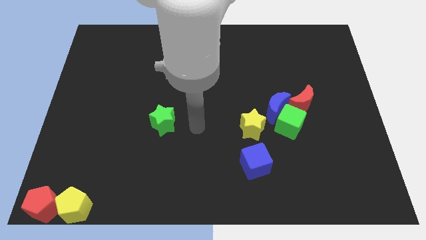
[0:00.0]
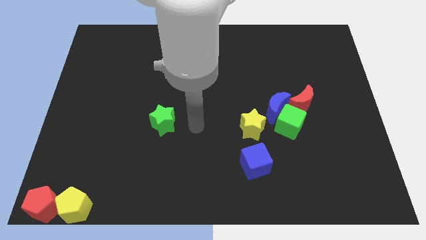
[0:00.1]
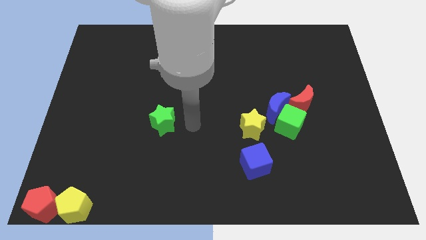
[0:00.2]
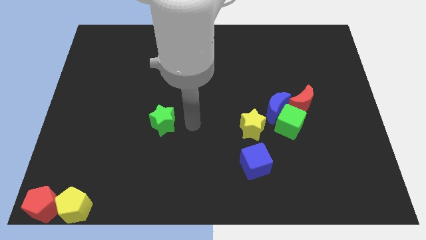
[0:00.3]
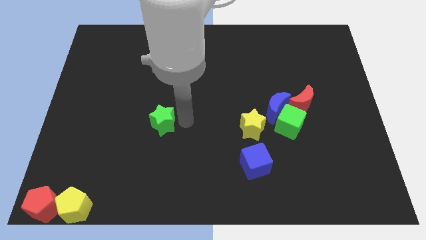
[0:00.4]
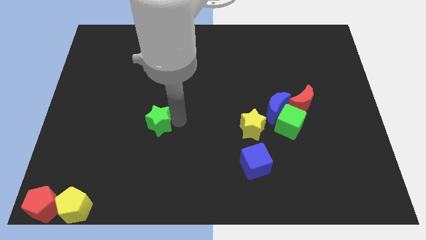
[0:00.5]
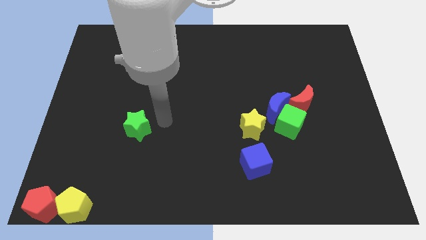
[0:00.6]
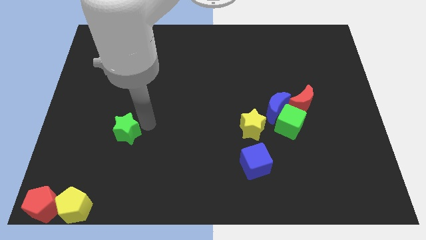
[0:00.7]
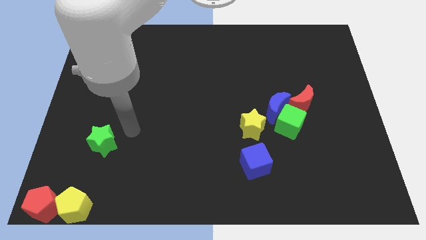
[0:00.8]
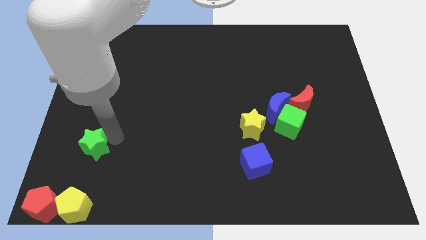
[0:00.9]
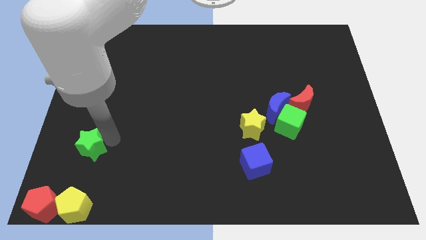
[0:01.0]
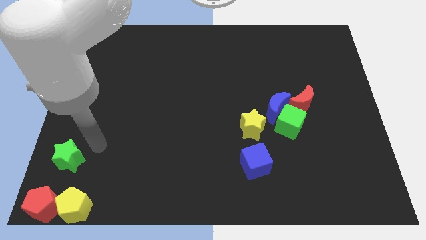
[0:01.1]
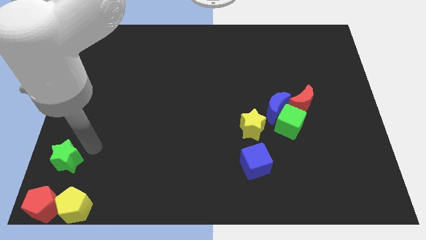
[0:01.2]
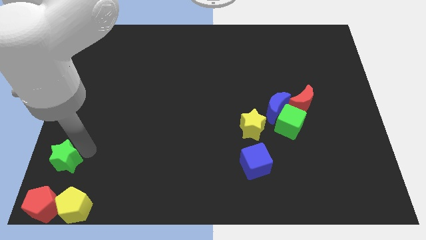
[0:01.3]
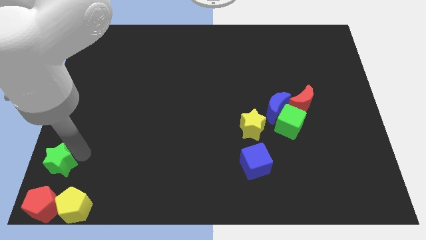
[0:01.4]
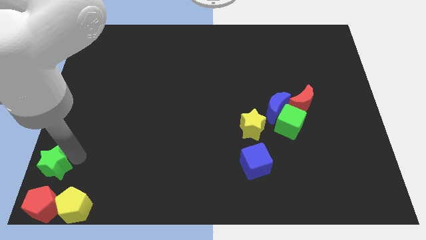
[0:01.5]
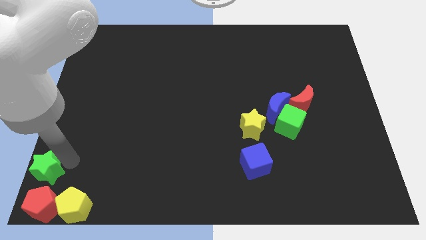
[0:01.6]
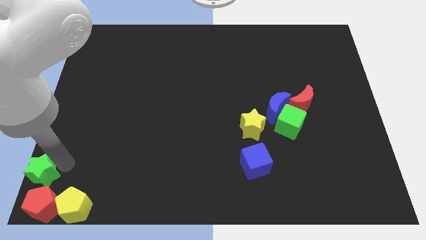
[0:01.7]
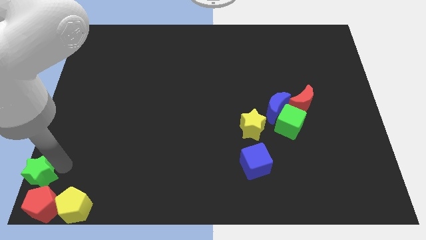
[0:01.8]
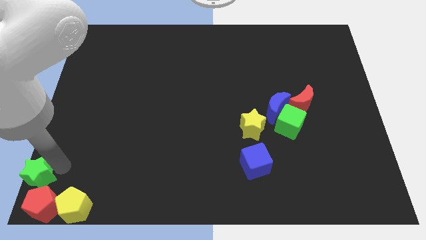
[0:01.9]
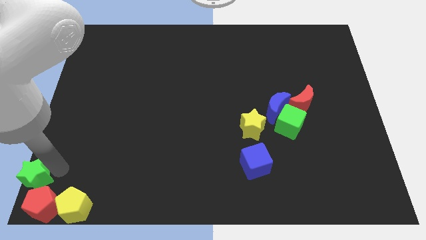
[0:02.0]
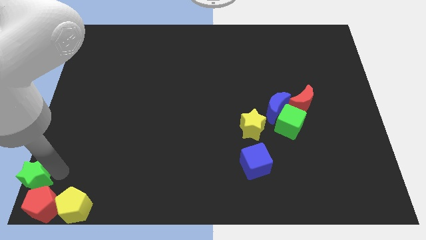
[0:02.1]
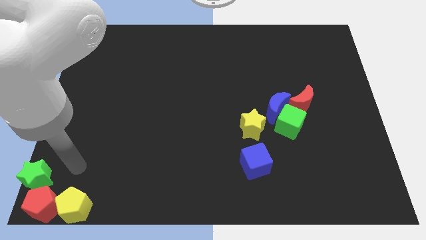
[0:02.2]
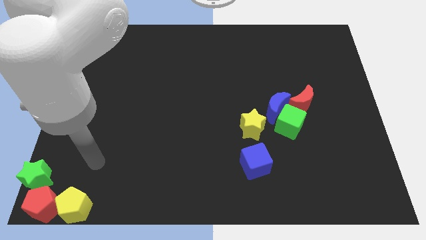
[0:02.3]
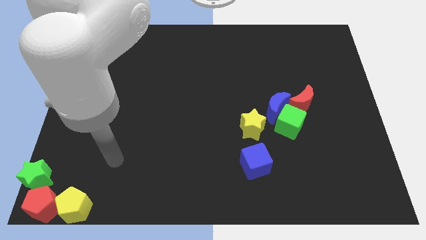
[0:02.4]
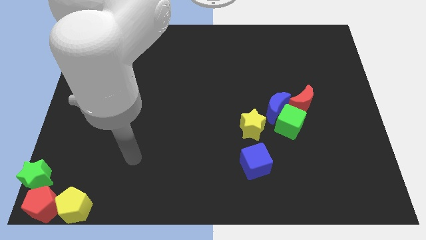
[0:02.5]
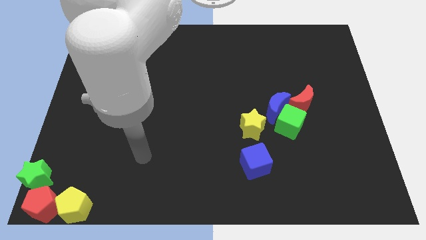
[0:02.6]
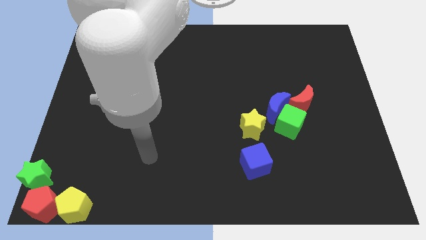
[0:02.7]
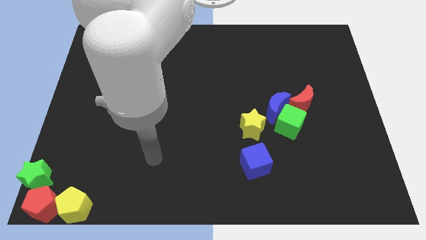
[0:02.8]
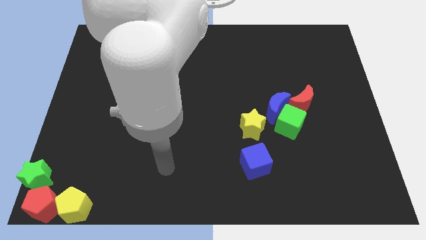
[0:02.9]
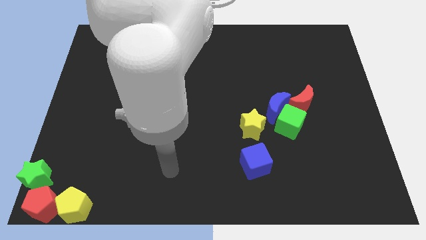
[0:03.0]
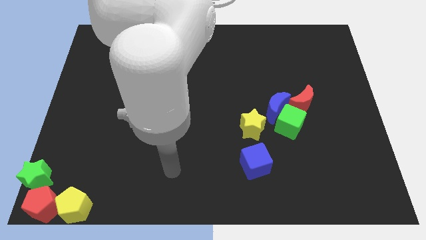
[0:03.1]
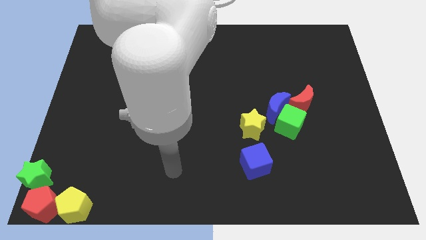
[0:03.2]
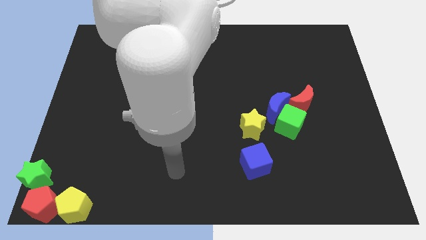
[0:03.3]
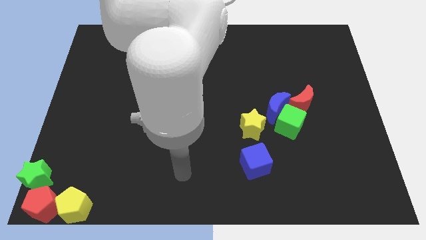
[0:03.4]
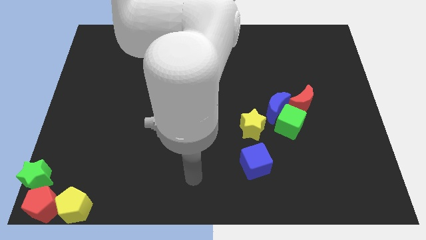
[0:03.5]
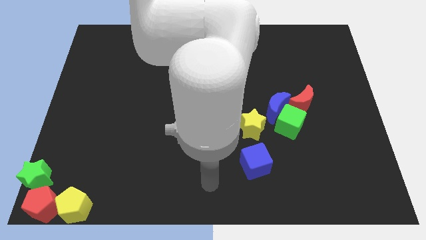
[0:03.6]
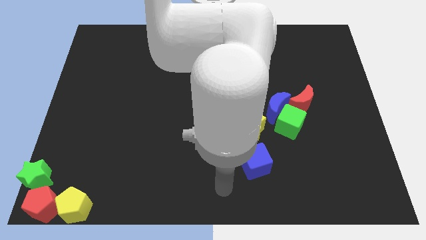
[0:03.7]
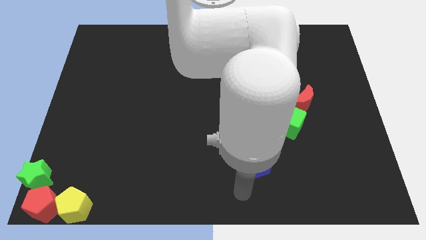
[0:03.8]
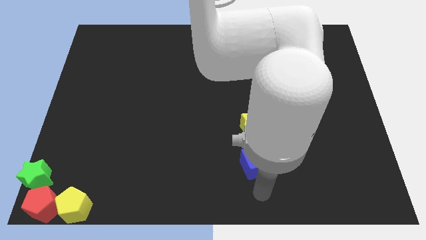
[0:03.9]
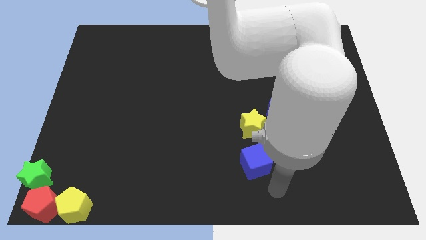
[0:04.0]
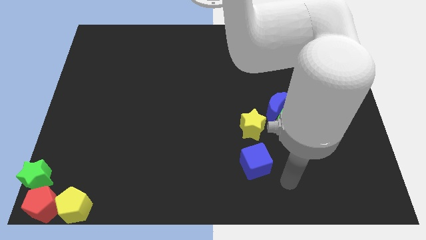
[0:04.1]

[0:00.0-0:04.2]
place the green star at the top of the red pentagon

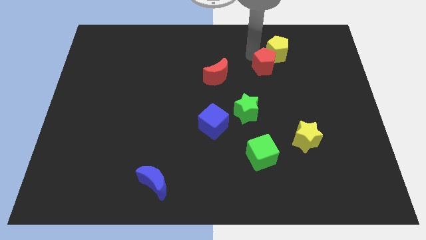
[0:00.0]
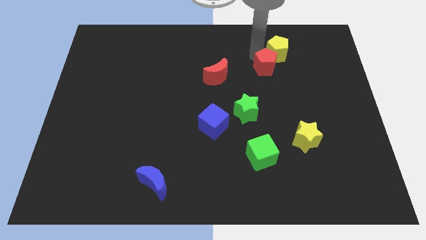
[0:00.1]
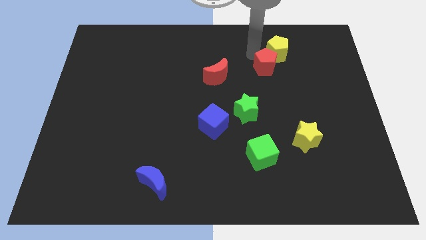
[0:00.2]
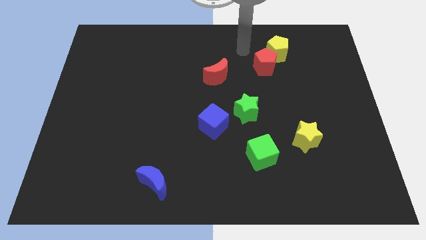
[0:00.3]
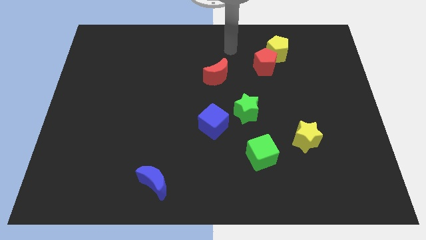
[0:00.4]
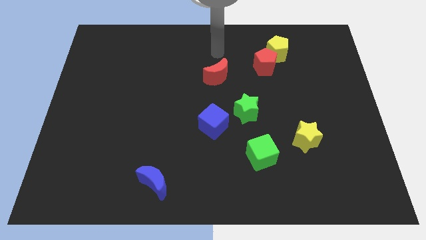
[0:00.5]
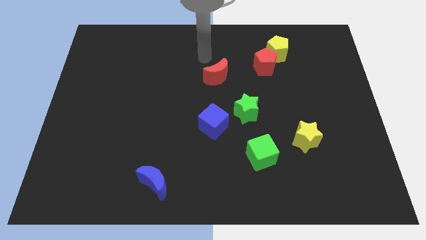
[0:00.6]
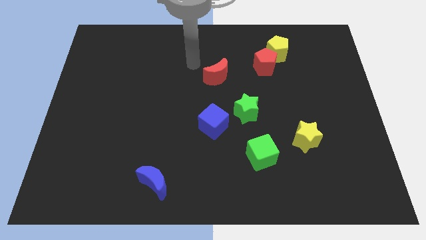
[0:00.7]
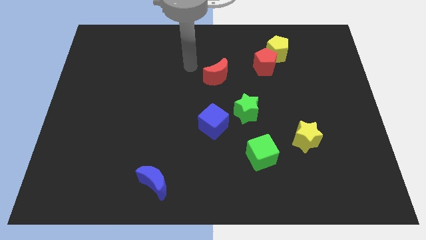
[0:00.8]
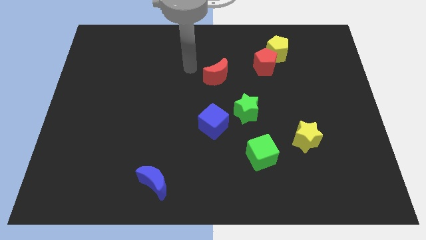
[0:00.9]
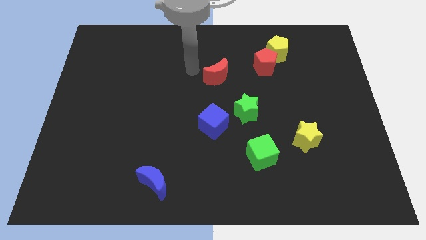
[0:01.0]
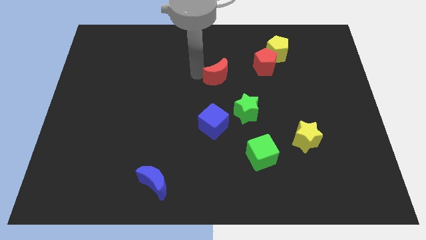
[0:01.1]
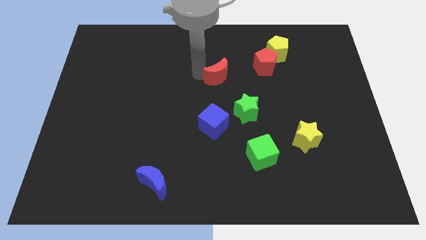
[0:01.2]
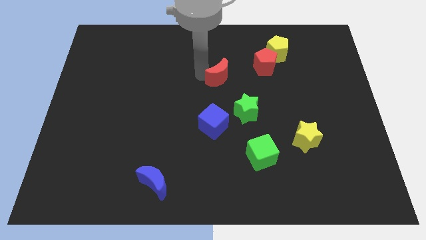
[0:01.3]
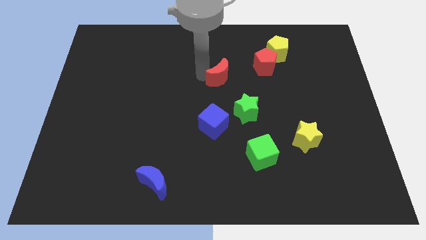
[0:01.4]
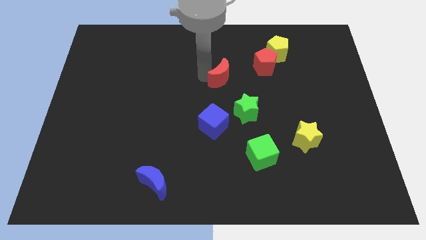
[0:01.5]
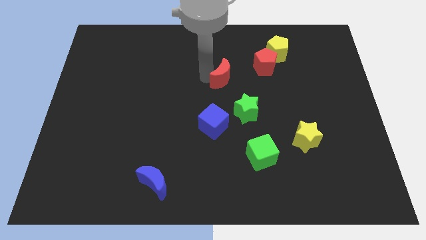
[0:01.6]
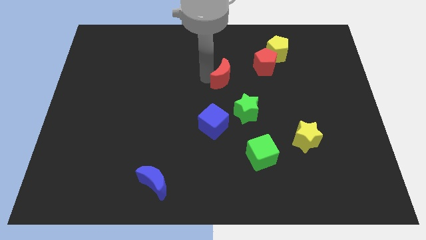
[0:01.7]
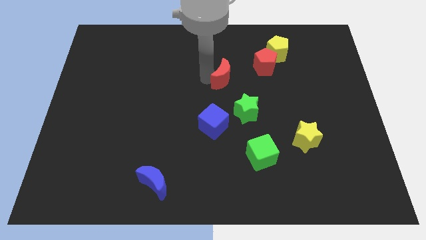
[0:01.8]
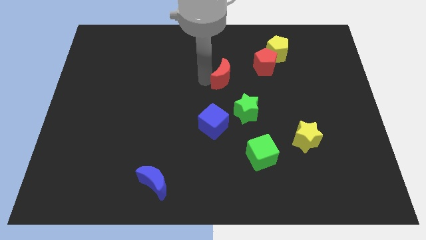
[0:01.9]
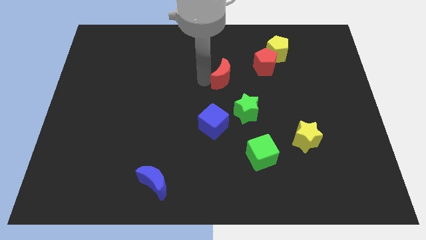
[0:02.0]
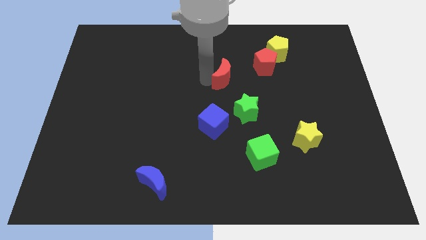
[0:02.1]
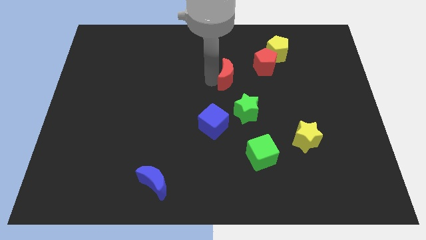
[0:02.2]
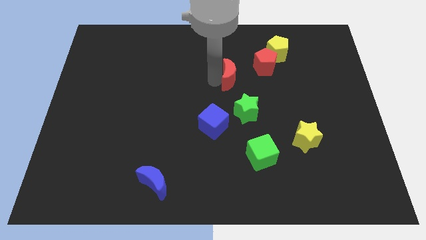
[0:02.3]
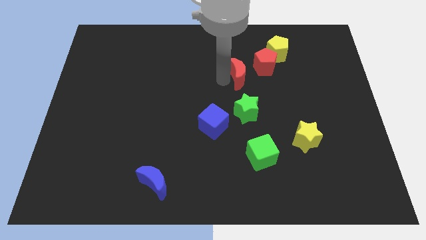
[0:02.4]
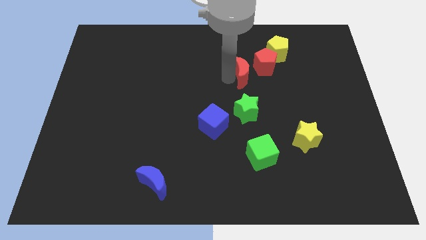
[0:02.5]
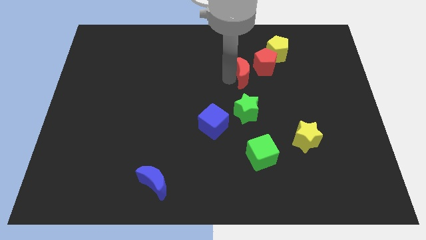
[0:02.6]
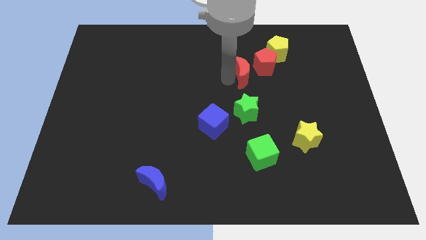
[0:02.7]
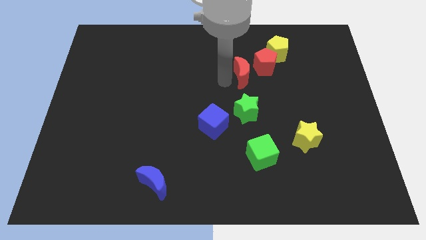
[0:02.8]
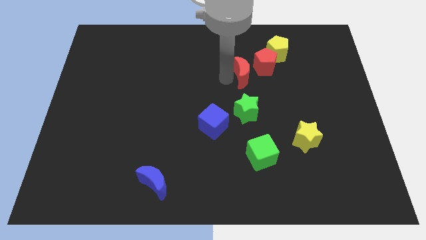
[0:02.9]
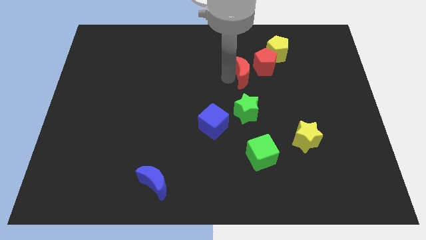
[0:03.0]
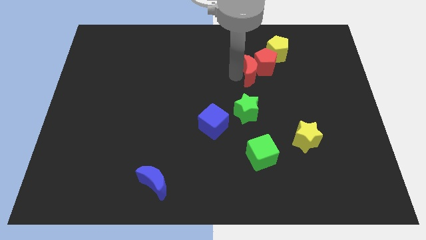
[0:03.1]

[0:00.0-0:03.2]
push the red crescent into the red pentagon

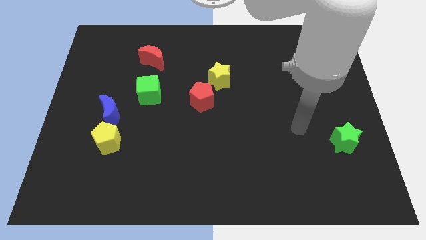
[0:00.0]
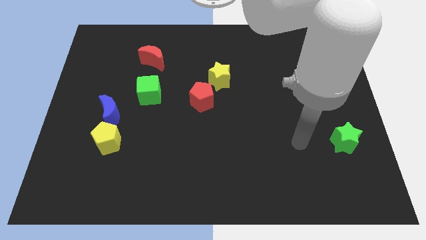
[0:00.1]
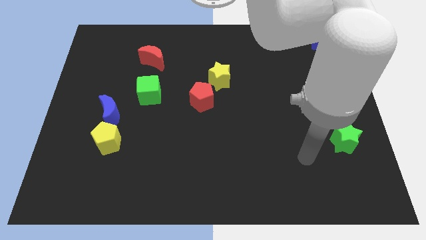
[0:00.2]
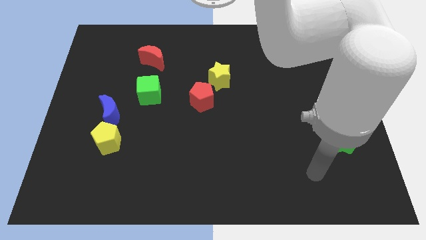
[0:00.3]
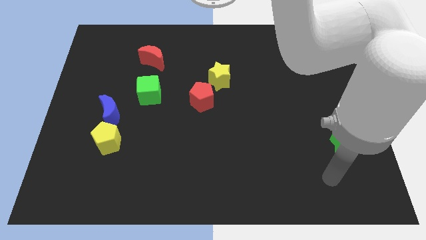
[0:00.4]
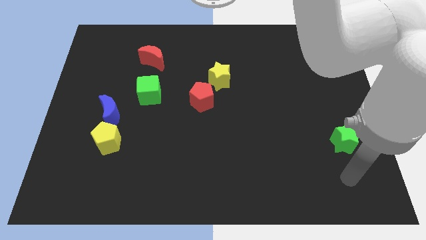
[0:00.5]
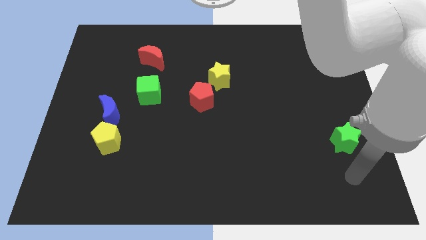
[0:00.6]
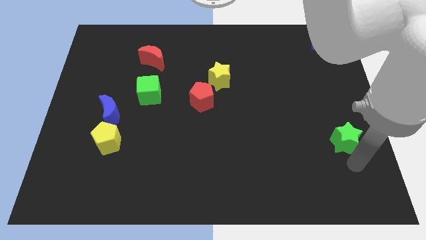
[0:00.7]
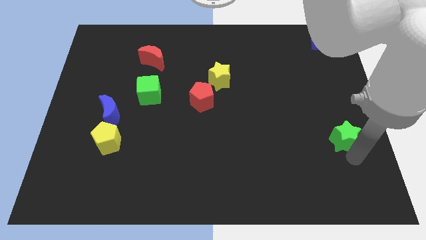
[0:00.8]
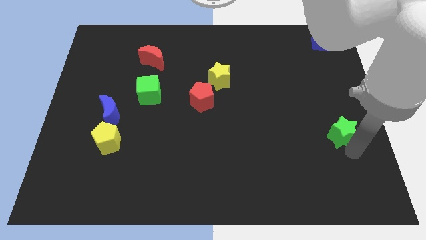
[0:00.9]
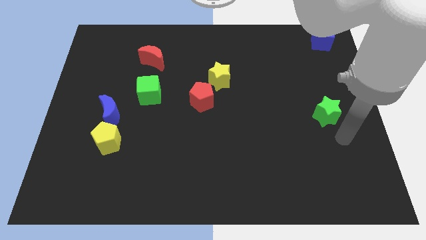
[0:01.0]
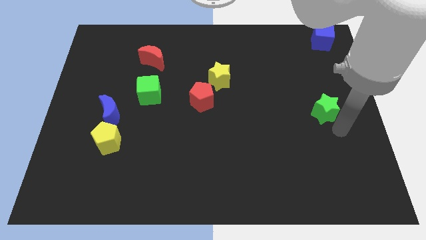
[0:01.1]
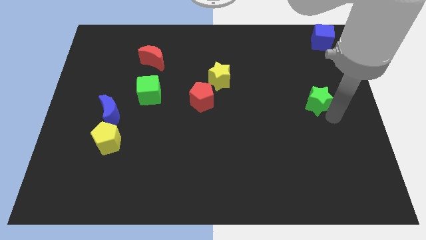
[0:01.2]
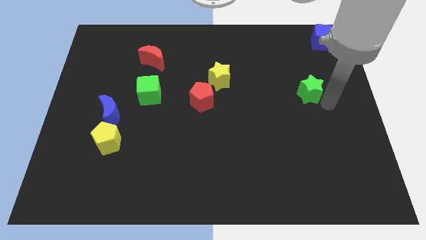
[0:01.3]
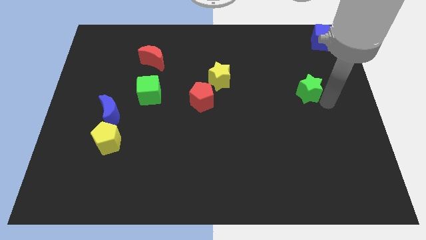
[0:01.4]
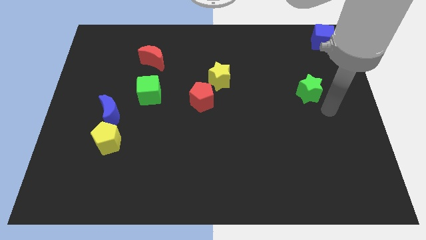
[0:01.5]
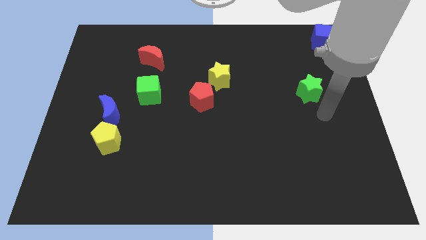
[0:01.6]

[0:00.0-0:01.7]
place the green star to the right side of the yellow star
